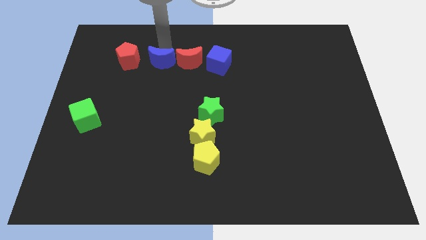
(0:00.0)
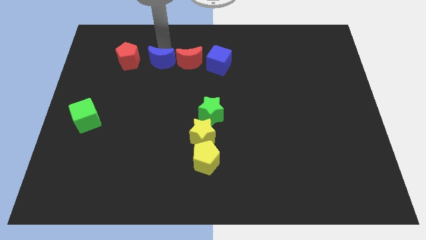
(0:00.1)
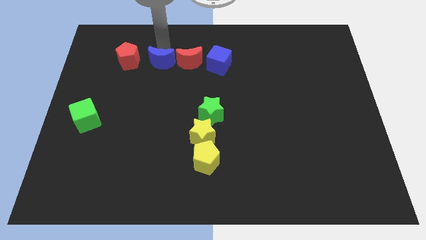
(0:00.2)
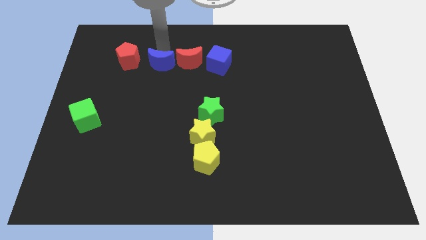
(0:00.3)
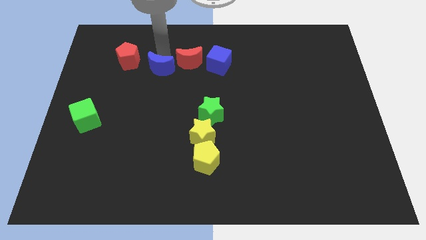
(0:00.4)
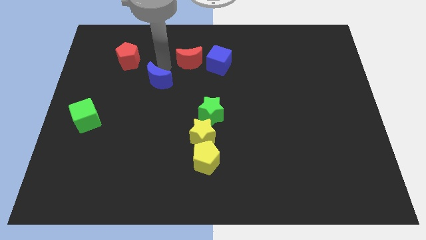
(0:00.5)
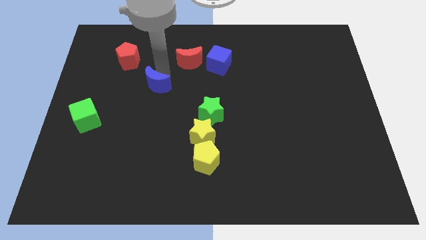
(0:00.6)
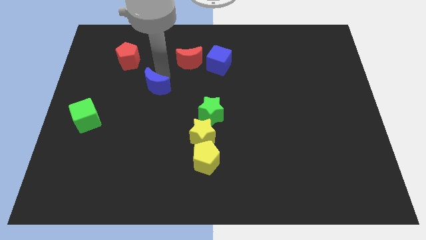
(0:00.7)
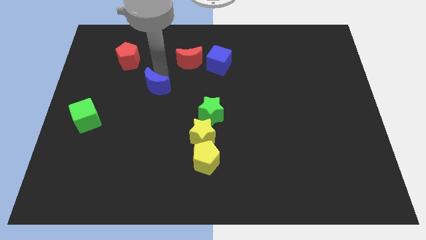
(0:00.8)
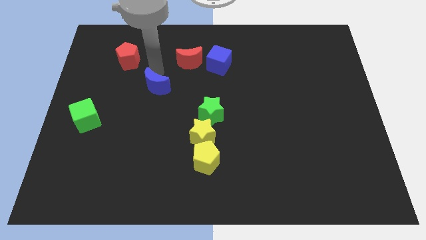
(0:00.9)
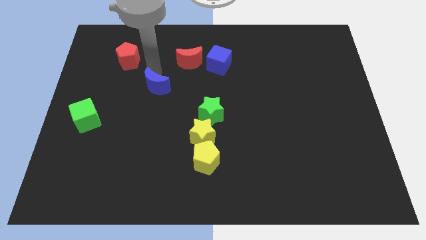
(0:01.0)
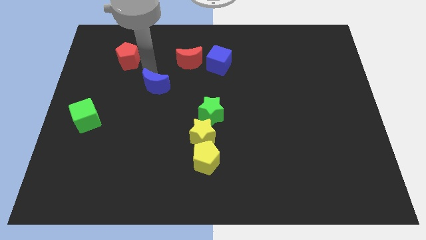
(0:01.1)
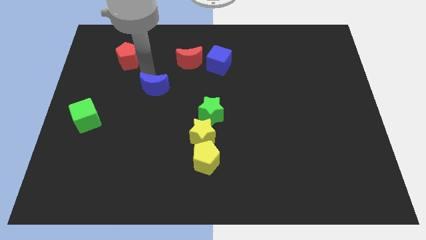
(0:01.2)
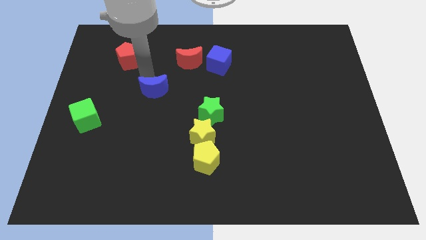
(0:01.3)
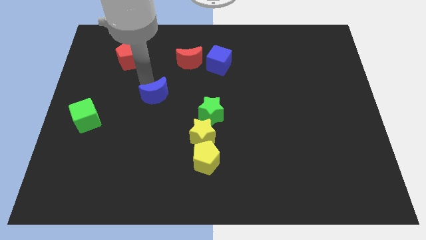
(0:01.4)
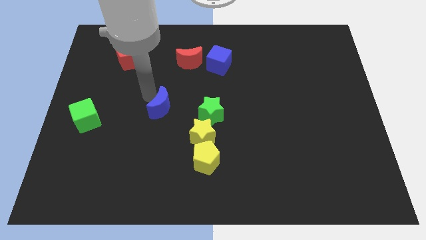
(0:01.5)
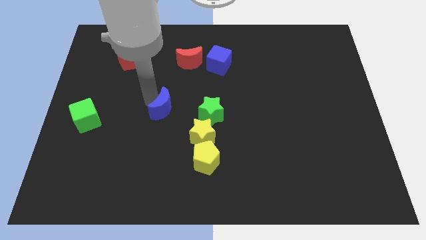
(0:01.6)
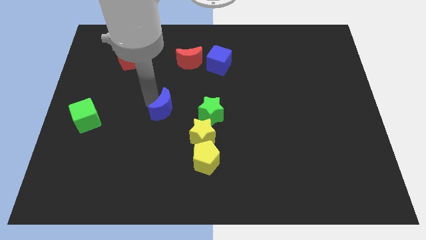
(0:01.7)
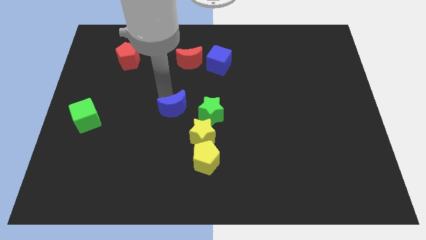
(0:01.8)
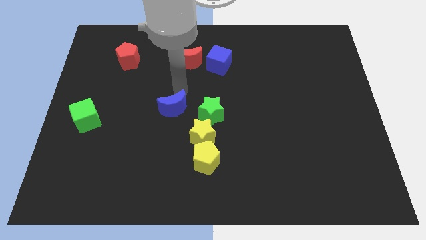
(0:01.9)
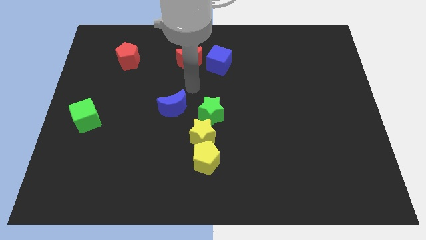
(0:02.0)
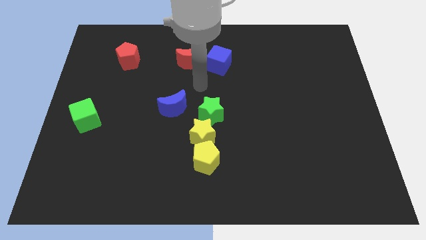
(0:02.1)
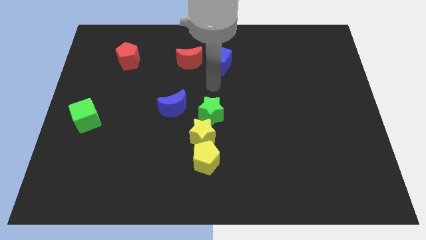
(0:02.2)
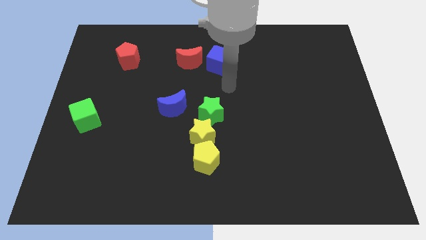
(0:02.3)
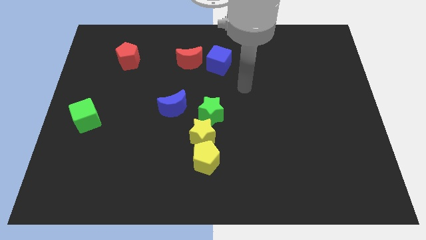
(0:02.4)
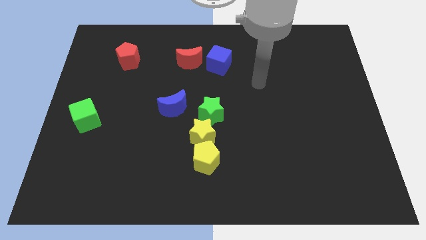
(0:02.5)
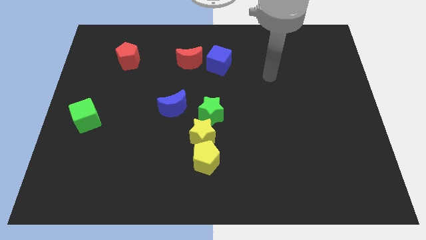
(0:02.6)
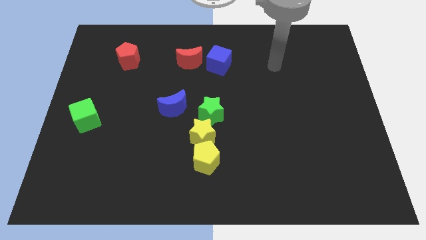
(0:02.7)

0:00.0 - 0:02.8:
separate the blue crescent from the horizontal line of blocks

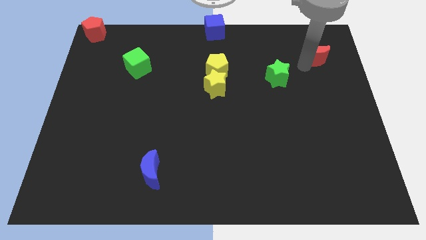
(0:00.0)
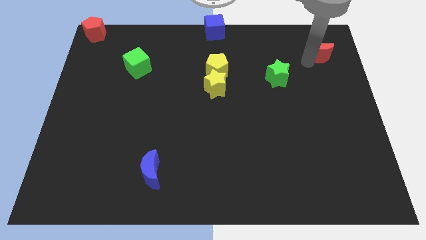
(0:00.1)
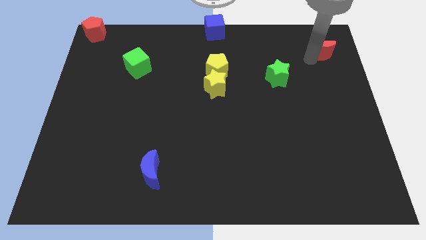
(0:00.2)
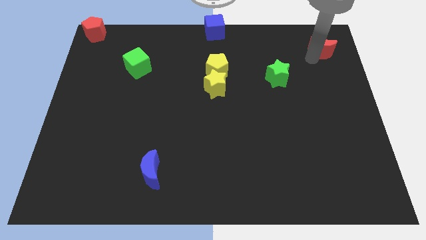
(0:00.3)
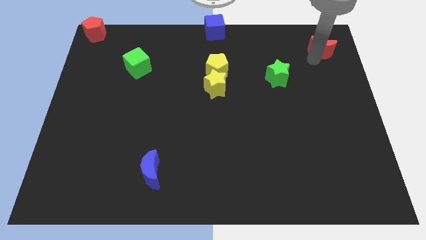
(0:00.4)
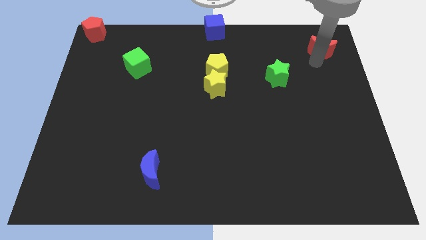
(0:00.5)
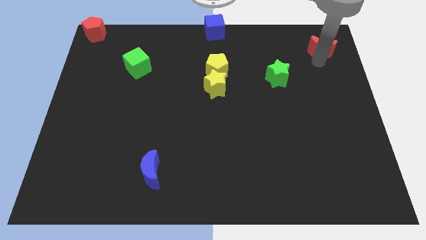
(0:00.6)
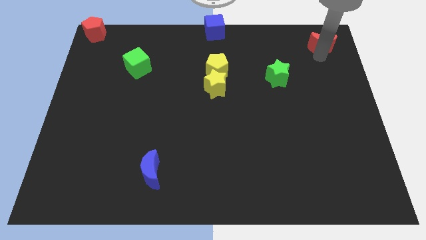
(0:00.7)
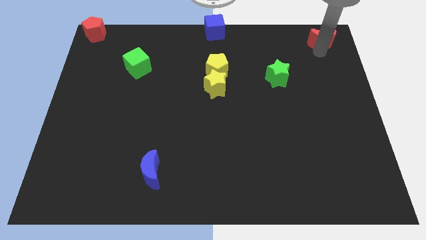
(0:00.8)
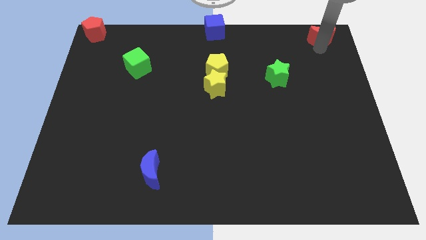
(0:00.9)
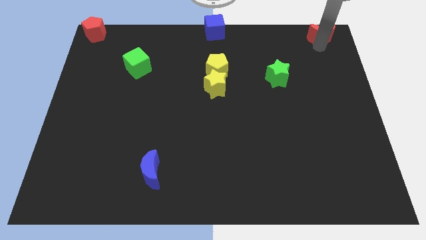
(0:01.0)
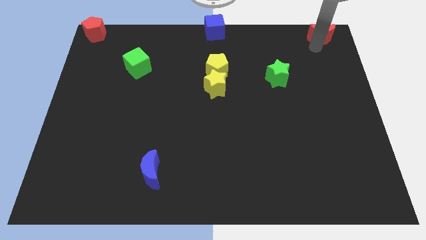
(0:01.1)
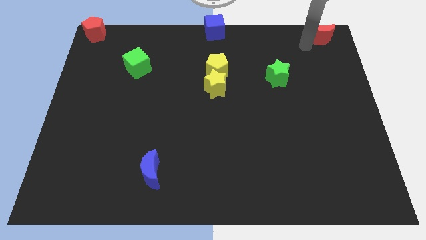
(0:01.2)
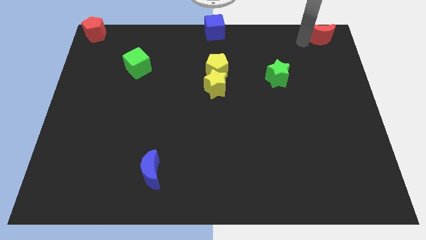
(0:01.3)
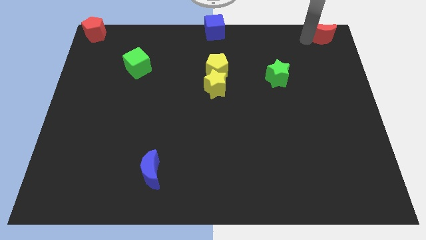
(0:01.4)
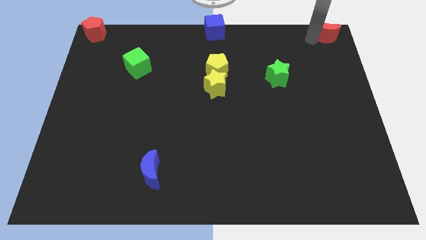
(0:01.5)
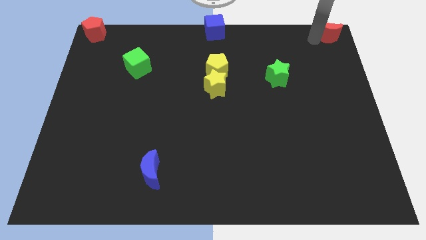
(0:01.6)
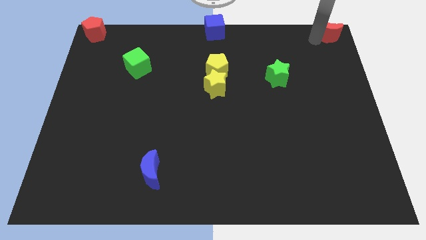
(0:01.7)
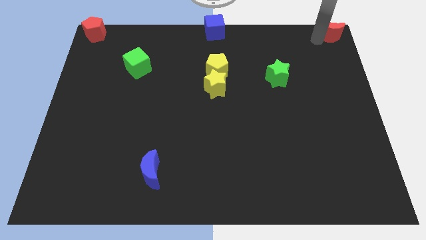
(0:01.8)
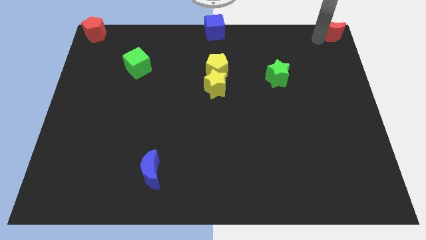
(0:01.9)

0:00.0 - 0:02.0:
push the red crescent to the top right corner of the board

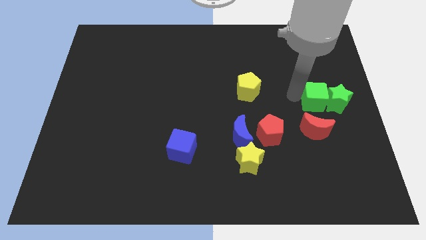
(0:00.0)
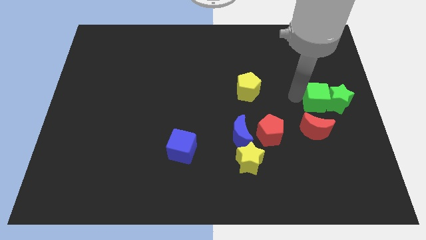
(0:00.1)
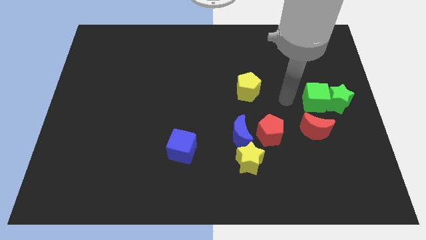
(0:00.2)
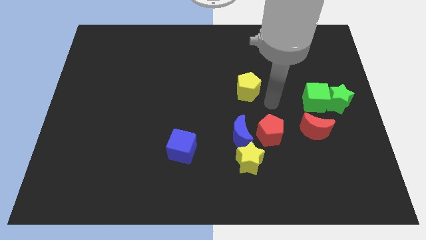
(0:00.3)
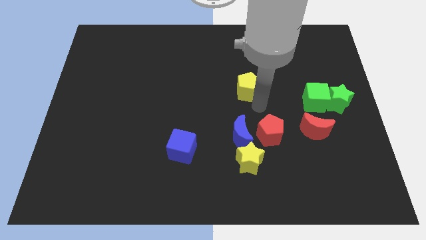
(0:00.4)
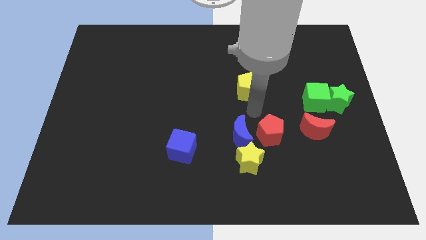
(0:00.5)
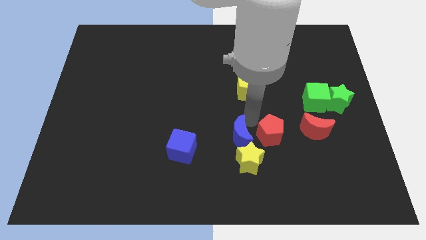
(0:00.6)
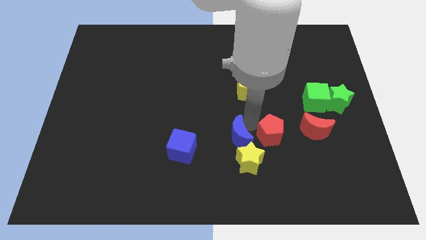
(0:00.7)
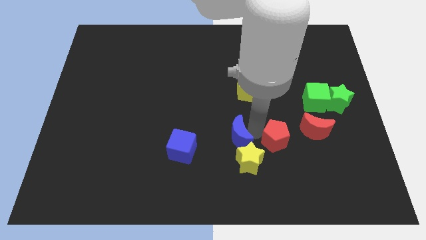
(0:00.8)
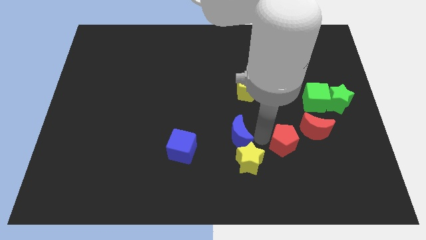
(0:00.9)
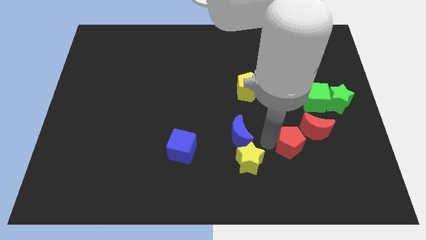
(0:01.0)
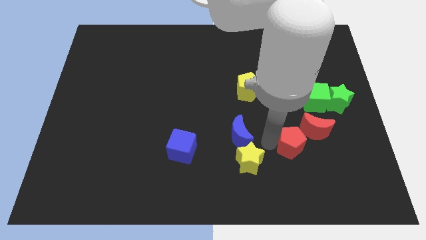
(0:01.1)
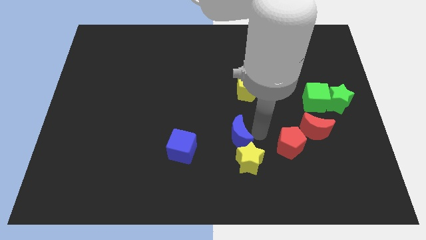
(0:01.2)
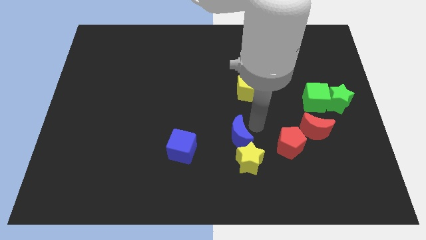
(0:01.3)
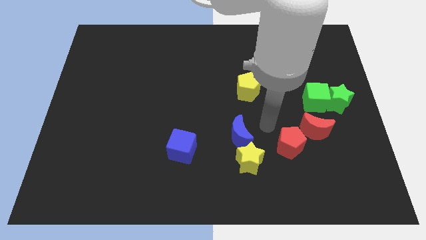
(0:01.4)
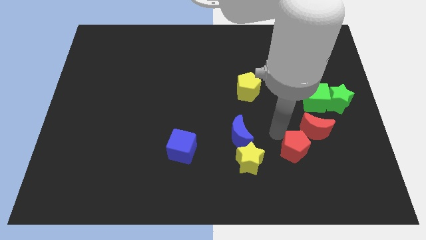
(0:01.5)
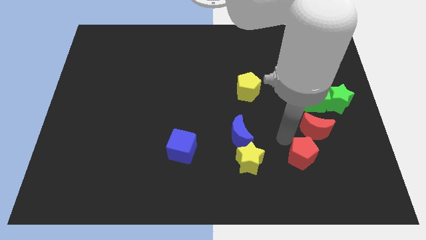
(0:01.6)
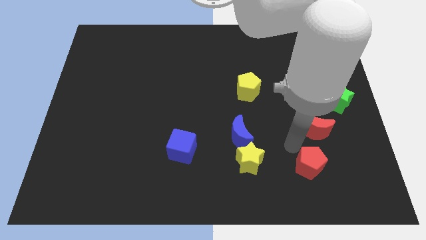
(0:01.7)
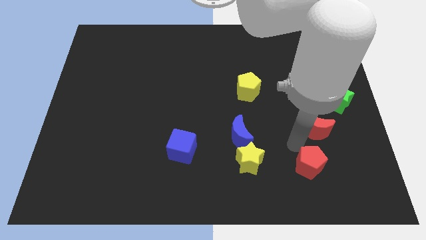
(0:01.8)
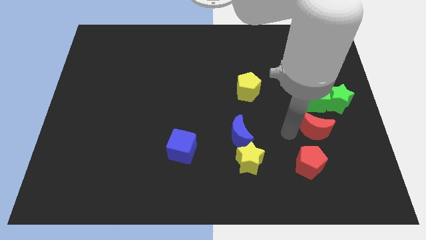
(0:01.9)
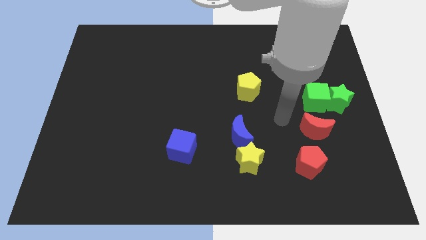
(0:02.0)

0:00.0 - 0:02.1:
slightly move the red pentagon towards the bottom of red moon

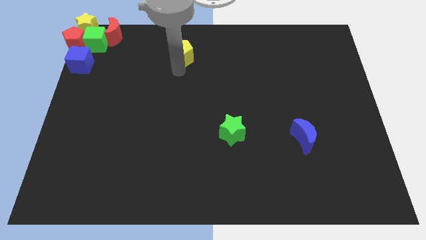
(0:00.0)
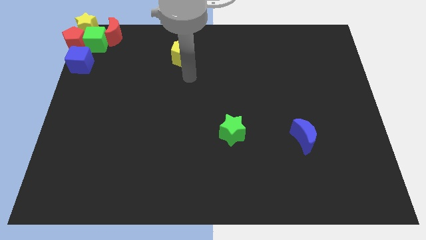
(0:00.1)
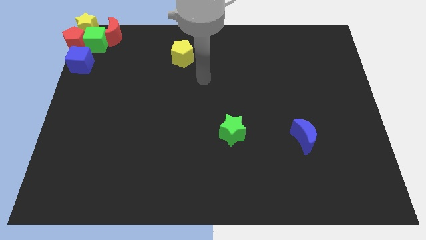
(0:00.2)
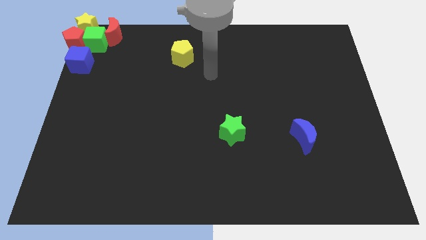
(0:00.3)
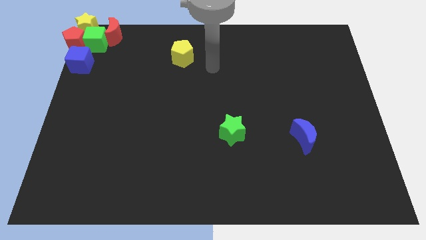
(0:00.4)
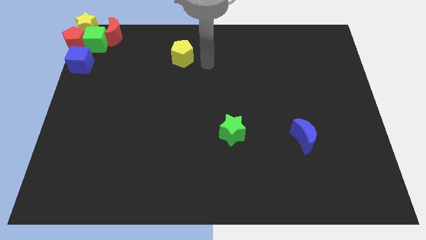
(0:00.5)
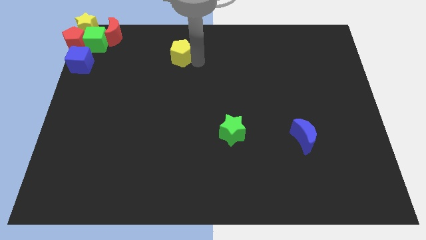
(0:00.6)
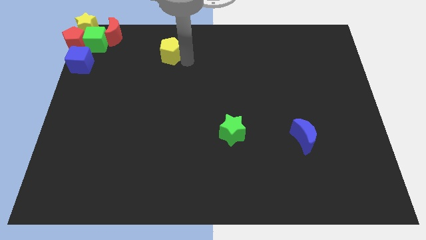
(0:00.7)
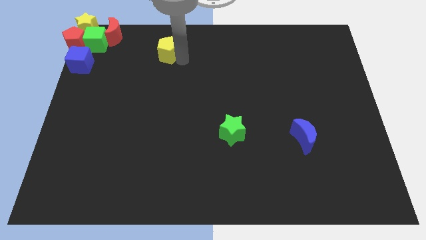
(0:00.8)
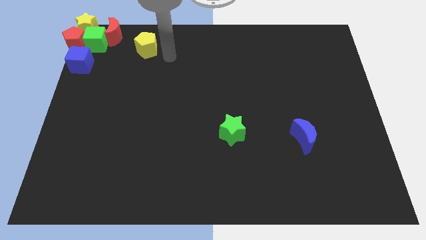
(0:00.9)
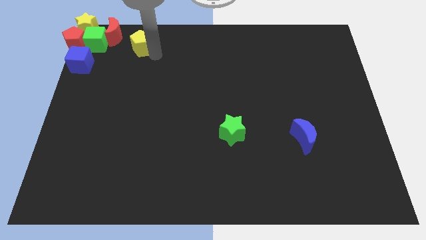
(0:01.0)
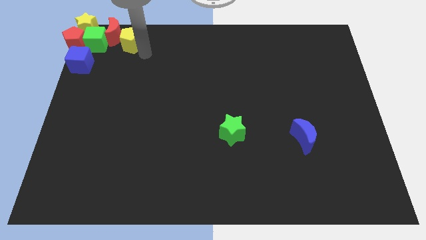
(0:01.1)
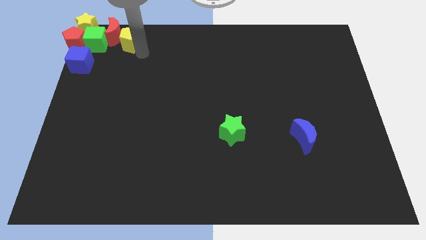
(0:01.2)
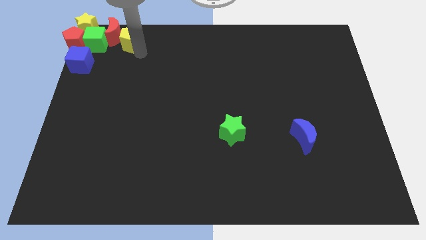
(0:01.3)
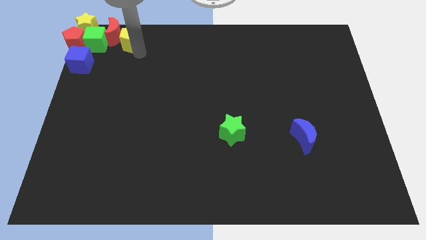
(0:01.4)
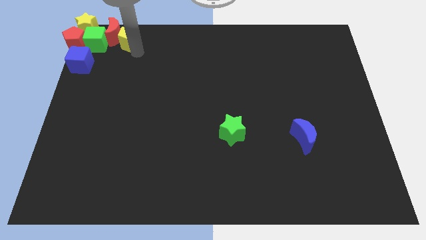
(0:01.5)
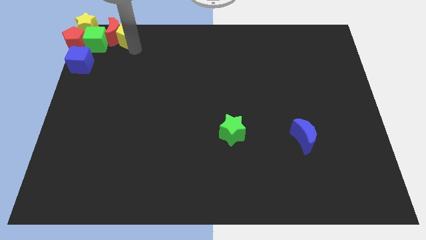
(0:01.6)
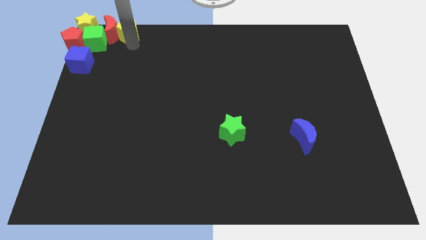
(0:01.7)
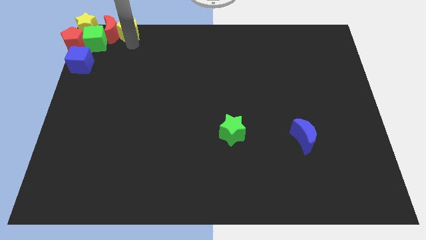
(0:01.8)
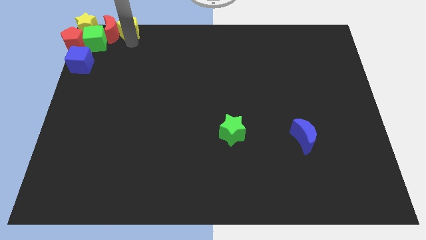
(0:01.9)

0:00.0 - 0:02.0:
push the yellow pentagon into the red moon

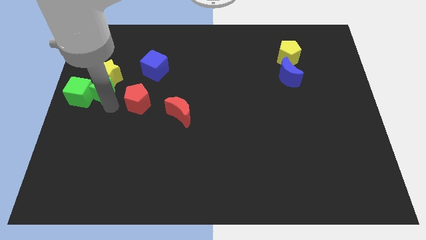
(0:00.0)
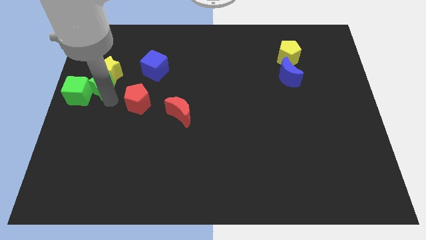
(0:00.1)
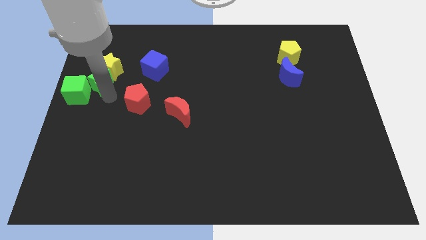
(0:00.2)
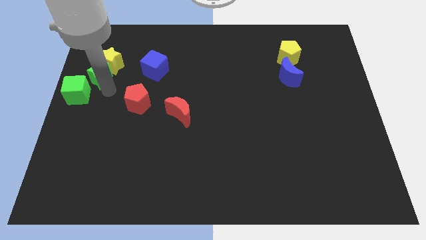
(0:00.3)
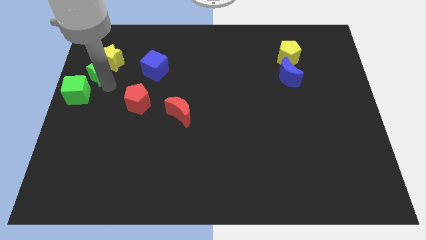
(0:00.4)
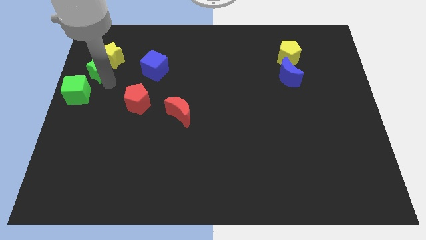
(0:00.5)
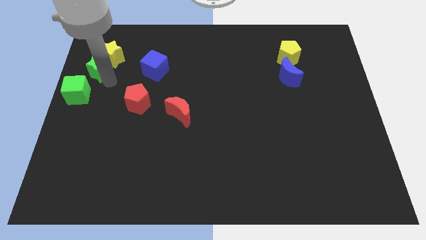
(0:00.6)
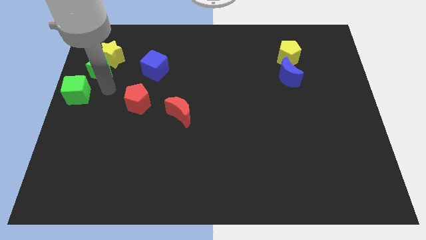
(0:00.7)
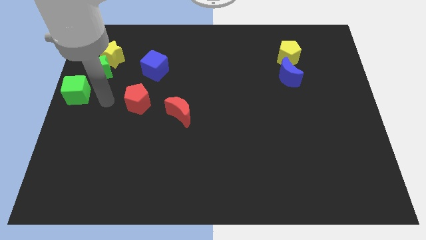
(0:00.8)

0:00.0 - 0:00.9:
move the green star upwards slightly
